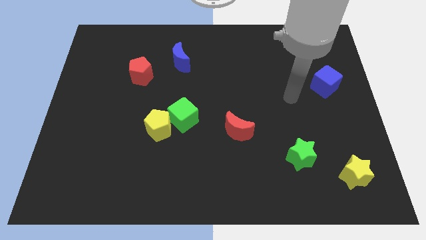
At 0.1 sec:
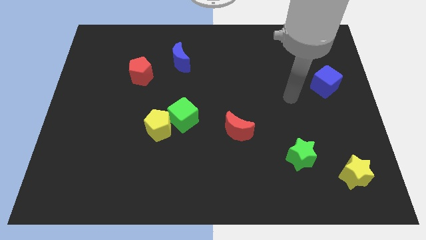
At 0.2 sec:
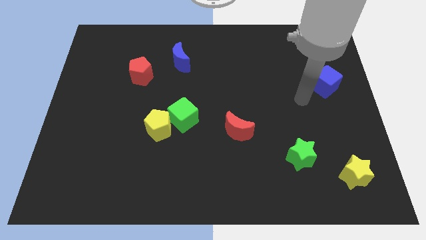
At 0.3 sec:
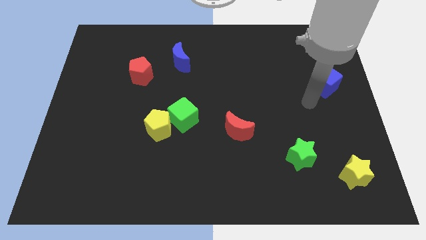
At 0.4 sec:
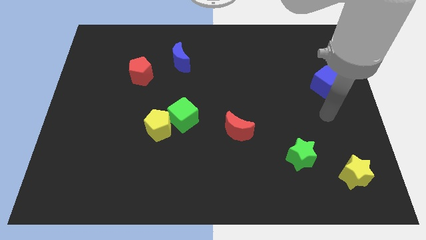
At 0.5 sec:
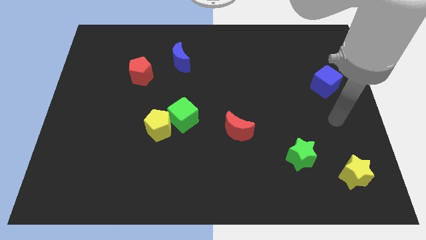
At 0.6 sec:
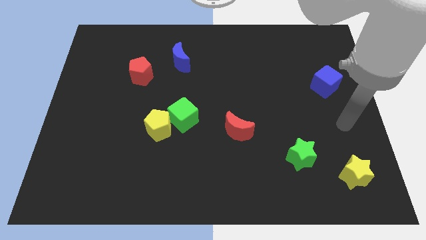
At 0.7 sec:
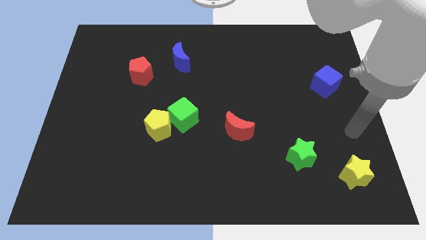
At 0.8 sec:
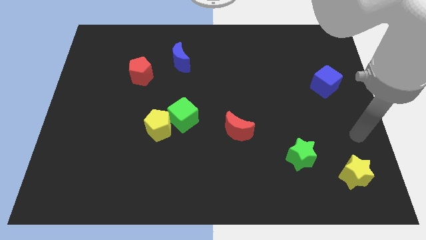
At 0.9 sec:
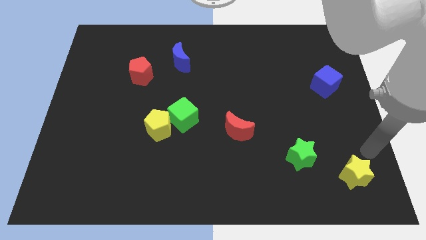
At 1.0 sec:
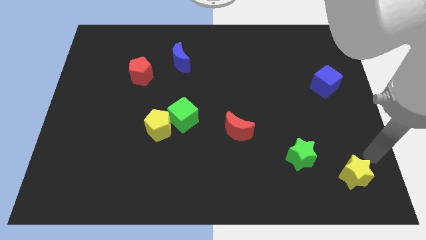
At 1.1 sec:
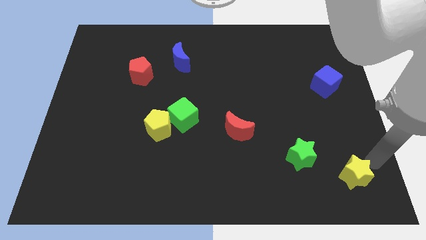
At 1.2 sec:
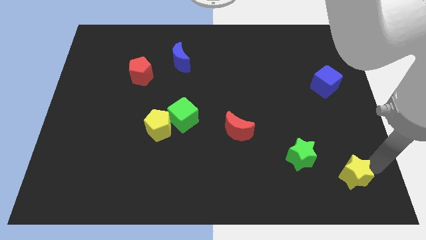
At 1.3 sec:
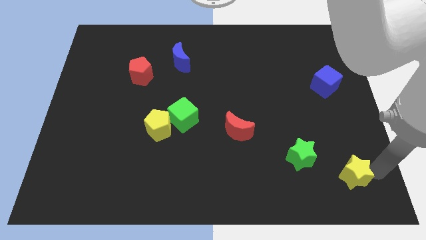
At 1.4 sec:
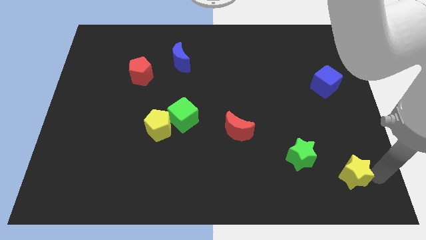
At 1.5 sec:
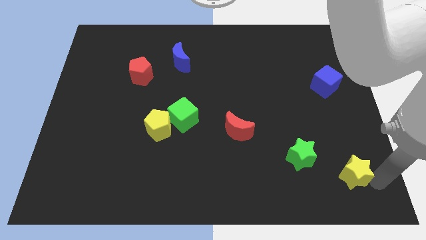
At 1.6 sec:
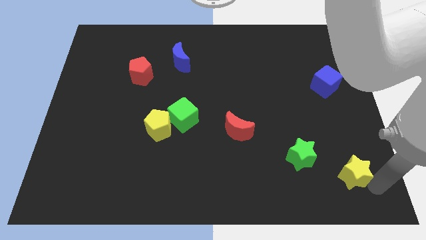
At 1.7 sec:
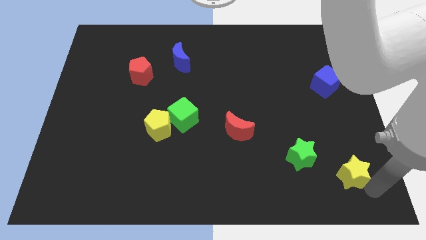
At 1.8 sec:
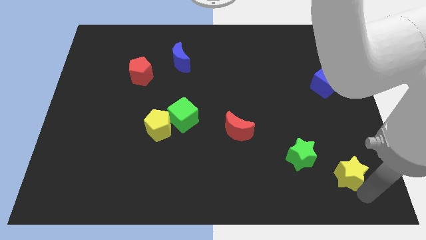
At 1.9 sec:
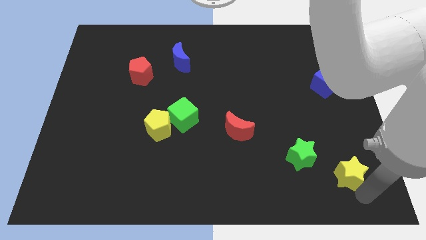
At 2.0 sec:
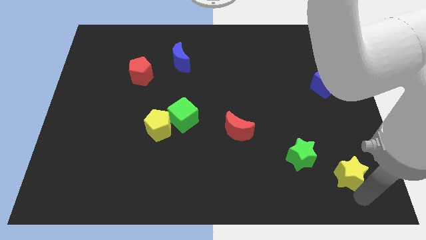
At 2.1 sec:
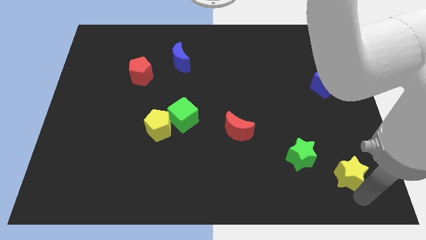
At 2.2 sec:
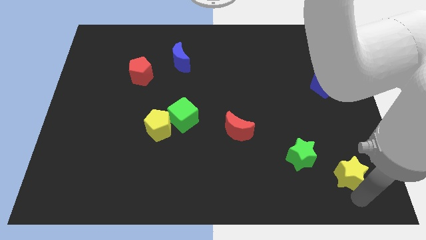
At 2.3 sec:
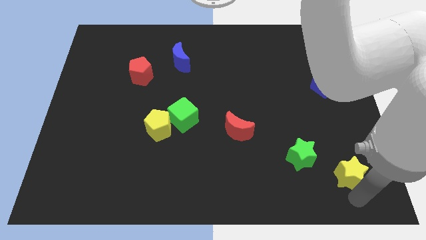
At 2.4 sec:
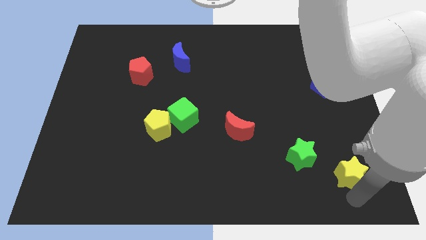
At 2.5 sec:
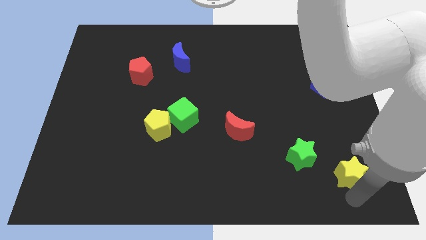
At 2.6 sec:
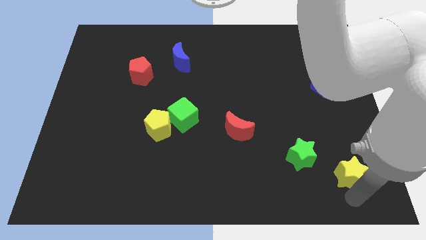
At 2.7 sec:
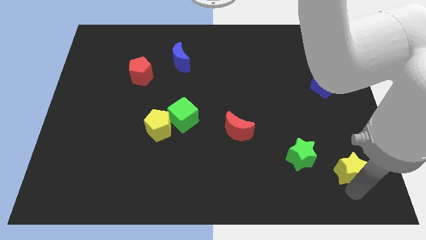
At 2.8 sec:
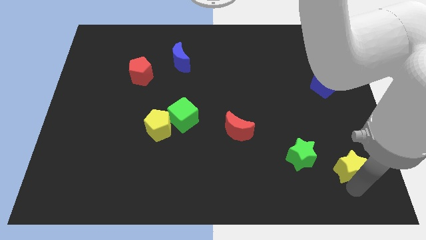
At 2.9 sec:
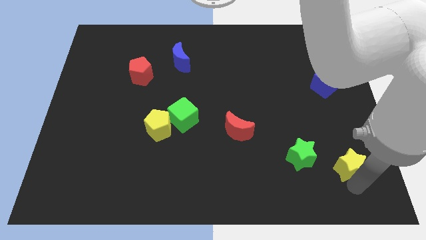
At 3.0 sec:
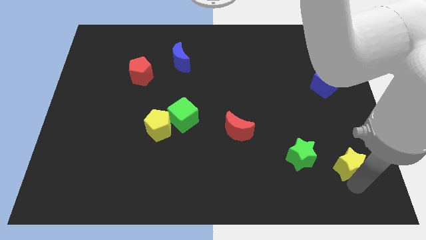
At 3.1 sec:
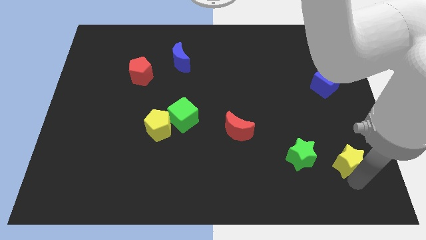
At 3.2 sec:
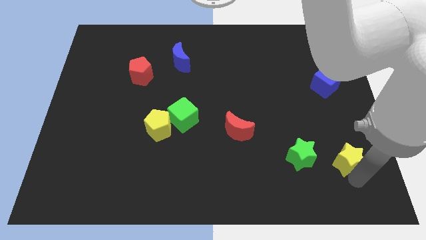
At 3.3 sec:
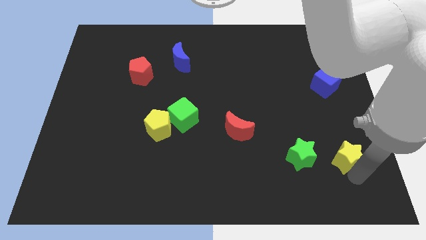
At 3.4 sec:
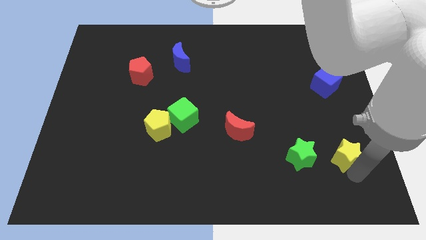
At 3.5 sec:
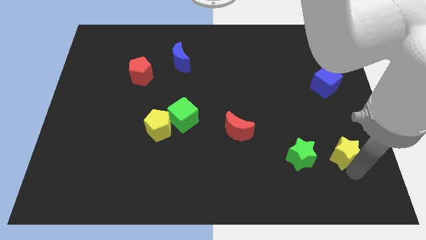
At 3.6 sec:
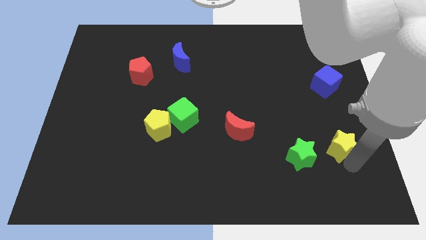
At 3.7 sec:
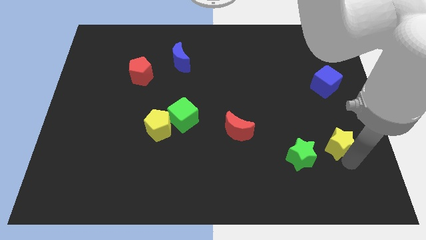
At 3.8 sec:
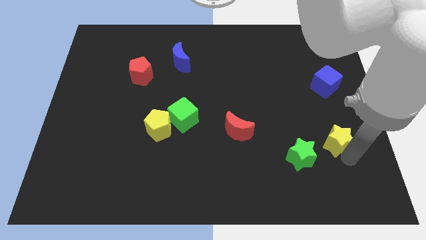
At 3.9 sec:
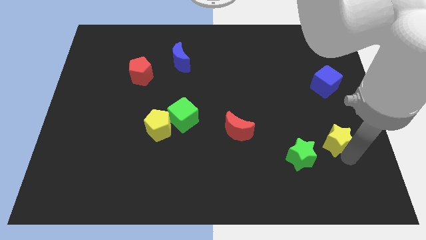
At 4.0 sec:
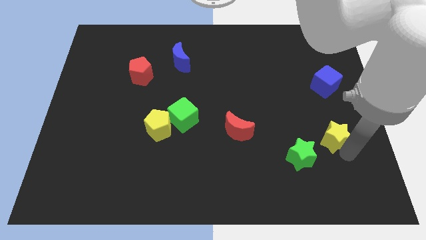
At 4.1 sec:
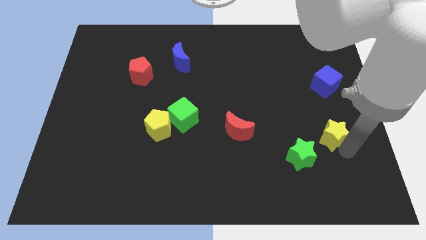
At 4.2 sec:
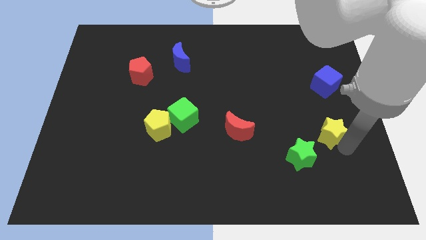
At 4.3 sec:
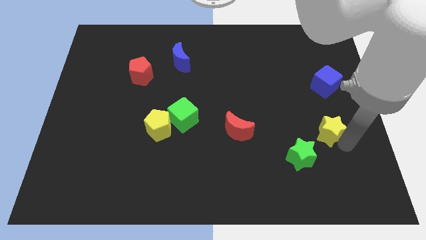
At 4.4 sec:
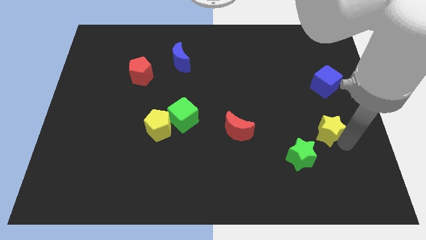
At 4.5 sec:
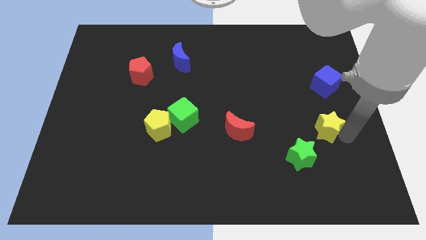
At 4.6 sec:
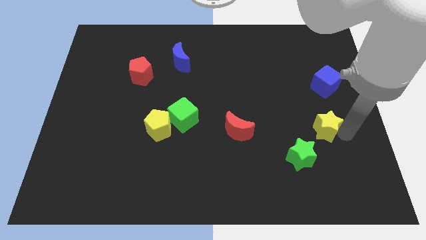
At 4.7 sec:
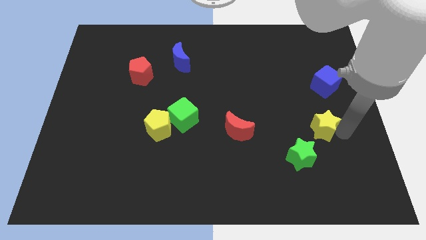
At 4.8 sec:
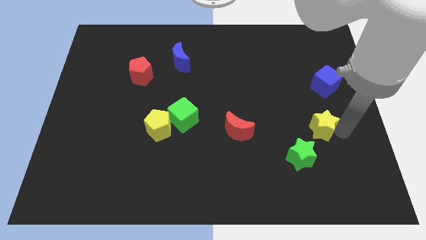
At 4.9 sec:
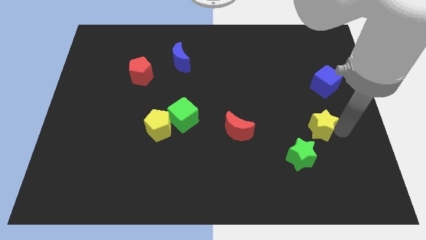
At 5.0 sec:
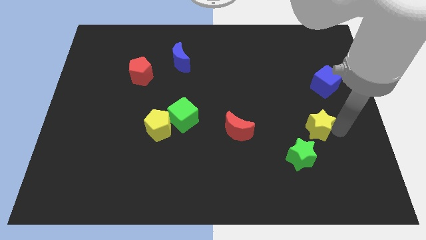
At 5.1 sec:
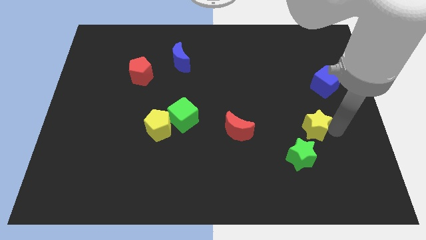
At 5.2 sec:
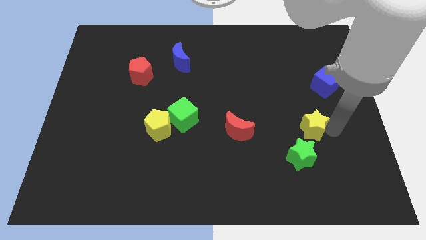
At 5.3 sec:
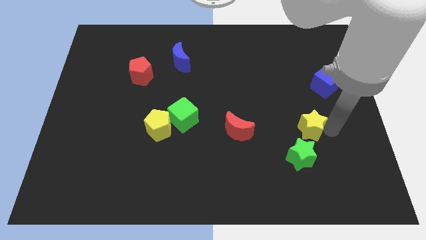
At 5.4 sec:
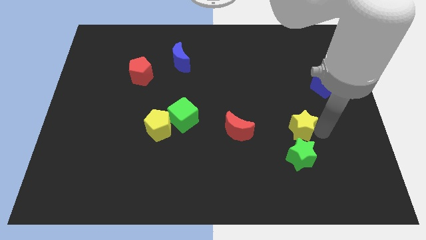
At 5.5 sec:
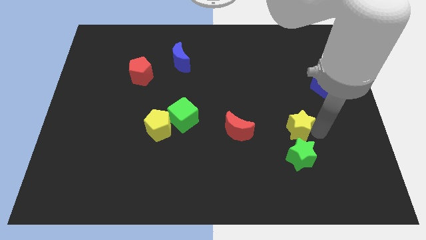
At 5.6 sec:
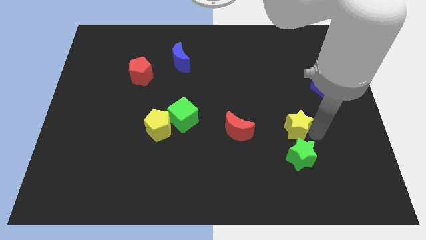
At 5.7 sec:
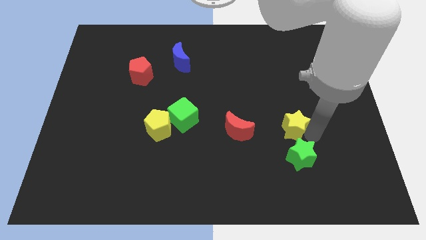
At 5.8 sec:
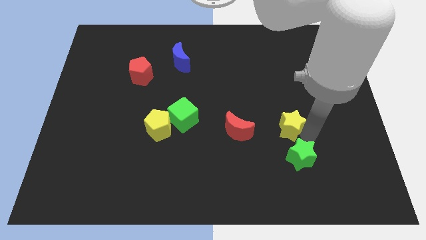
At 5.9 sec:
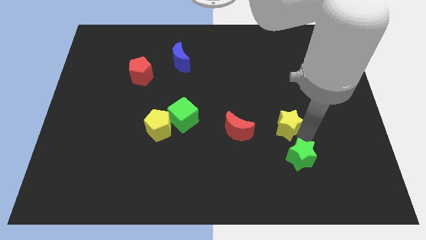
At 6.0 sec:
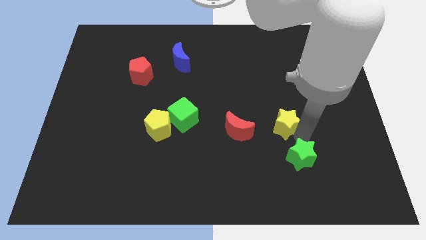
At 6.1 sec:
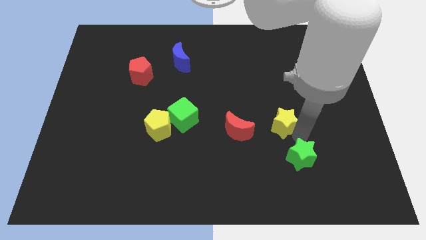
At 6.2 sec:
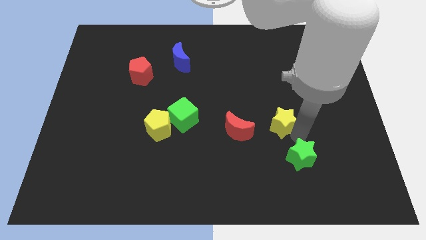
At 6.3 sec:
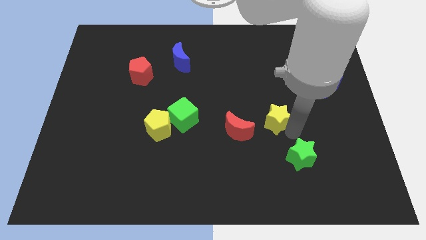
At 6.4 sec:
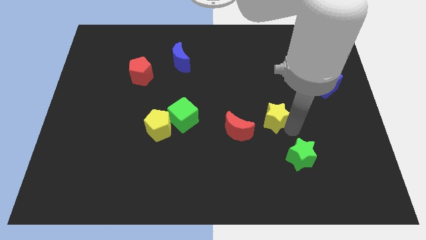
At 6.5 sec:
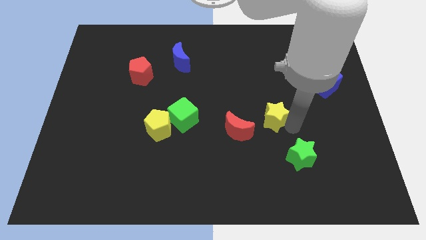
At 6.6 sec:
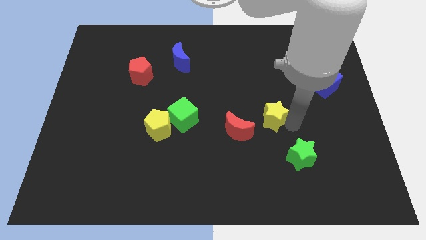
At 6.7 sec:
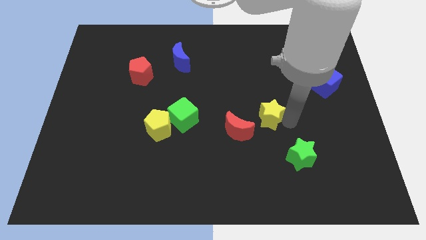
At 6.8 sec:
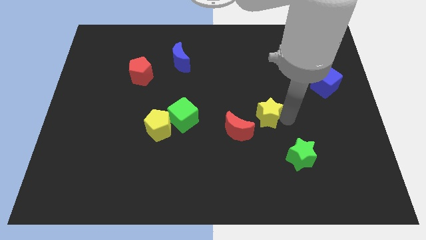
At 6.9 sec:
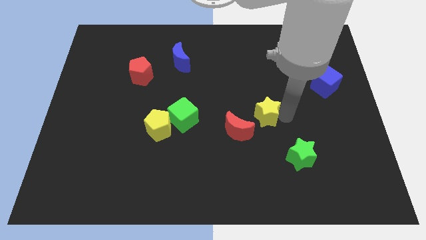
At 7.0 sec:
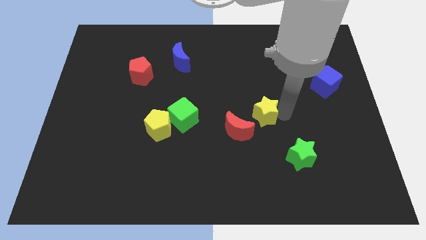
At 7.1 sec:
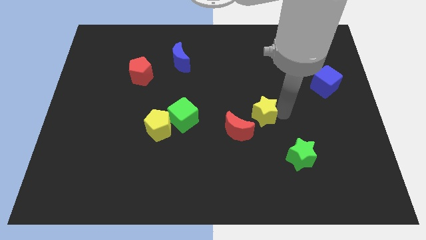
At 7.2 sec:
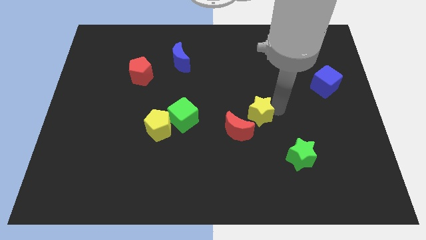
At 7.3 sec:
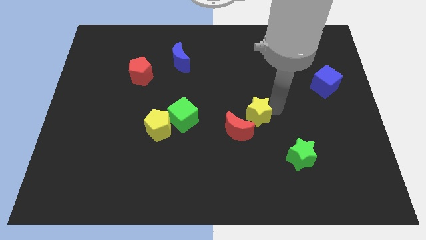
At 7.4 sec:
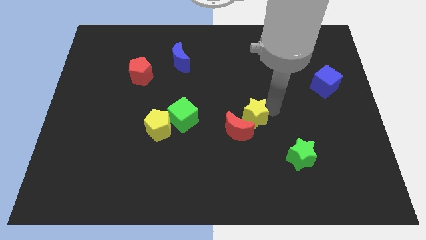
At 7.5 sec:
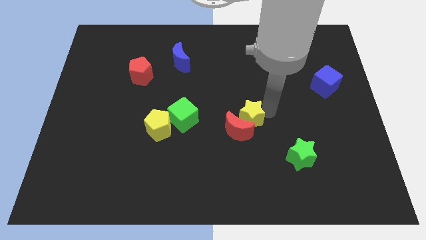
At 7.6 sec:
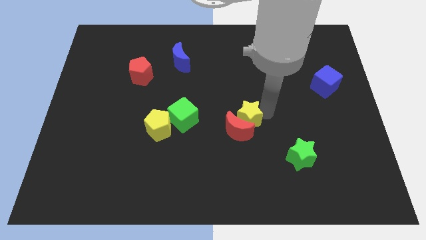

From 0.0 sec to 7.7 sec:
move the yellow star towards the red moon

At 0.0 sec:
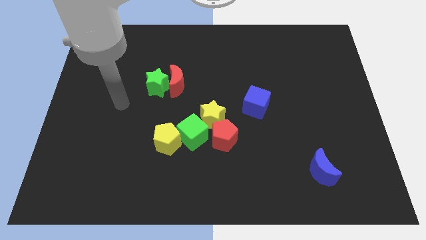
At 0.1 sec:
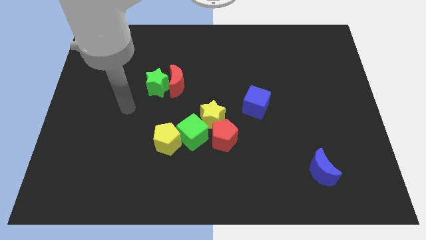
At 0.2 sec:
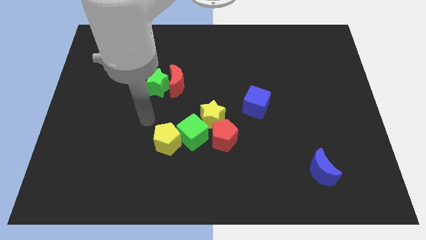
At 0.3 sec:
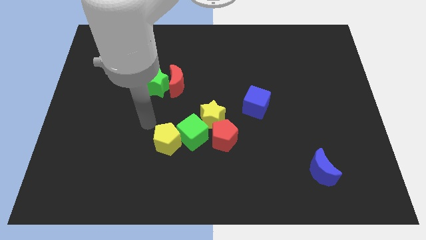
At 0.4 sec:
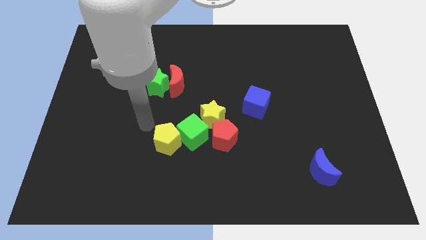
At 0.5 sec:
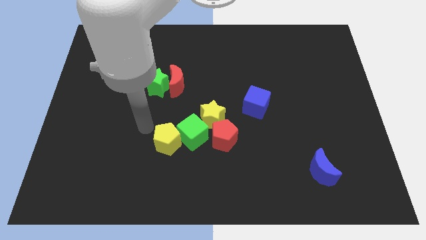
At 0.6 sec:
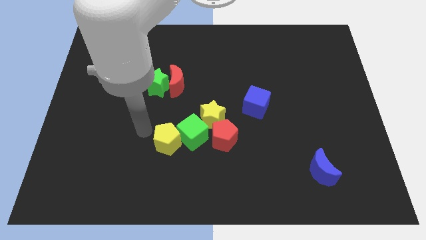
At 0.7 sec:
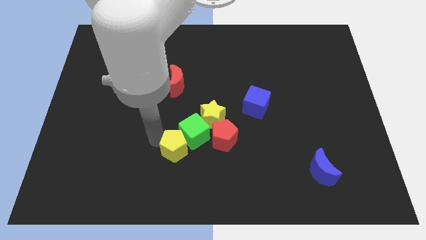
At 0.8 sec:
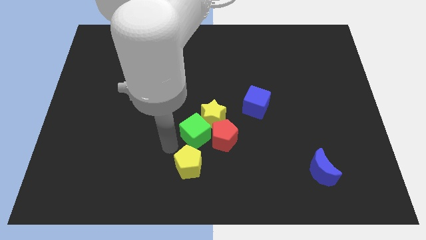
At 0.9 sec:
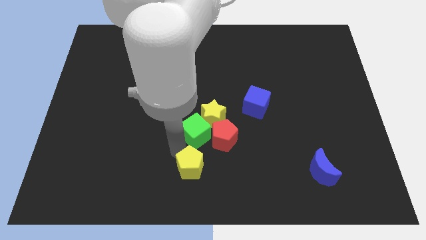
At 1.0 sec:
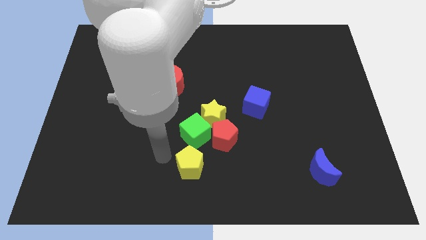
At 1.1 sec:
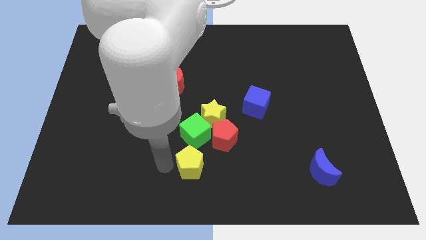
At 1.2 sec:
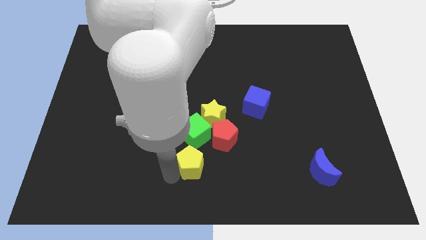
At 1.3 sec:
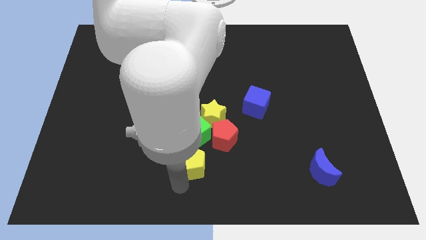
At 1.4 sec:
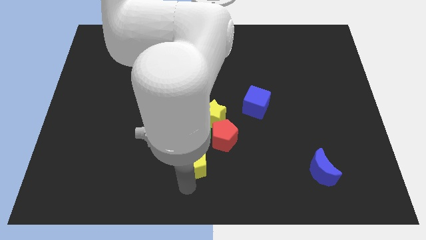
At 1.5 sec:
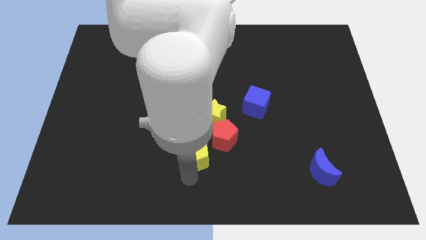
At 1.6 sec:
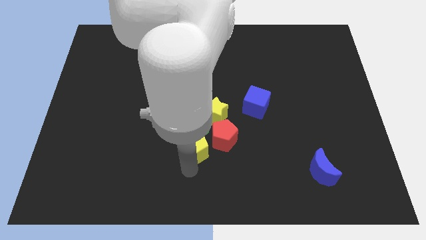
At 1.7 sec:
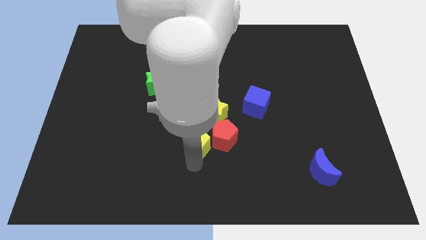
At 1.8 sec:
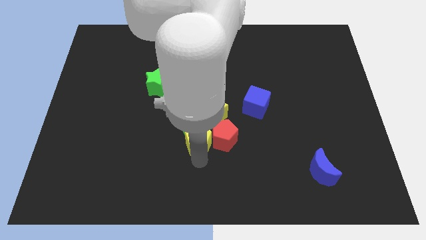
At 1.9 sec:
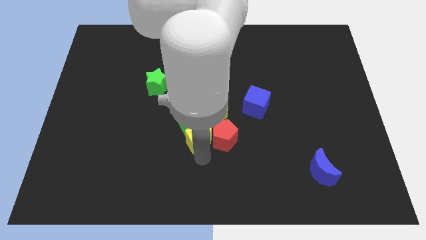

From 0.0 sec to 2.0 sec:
move the yellow pentagon towards the red pentagon
